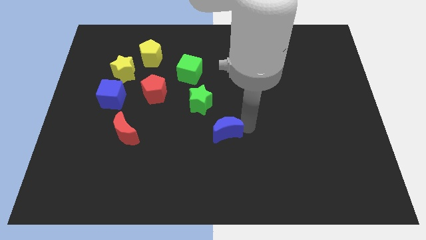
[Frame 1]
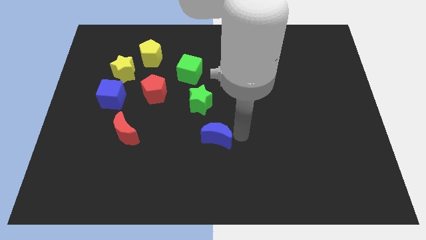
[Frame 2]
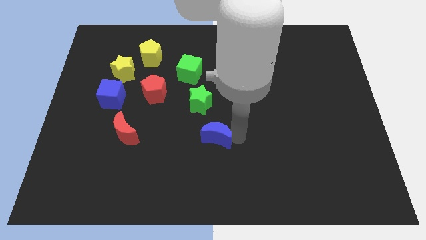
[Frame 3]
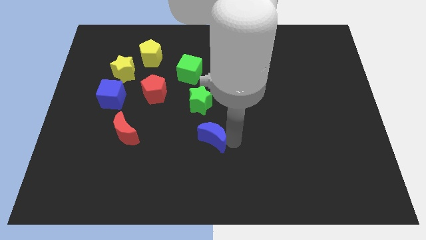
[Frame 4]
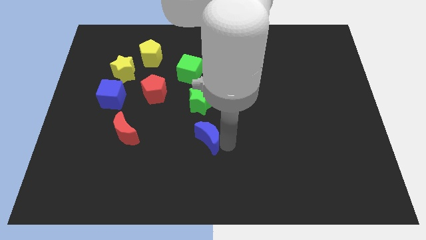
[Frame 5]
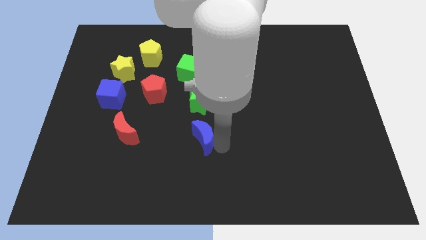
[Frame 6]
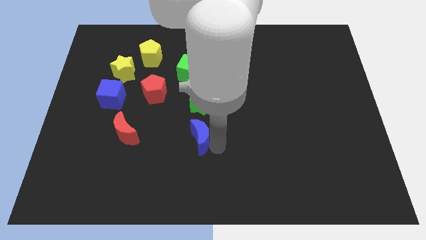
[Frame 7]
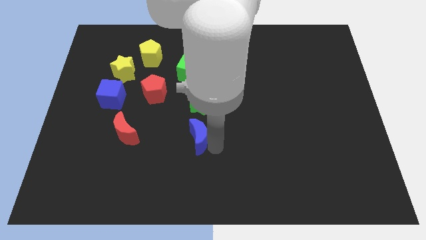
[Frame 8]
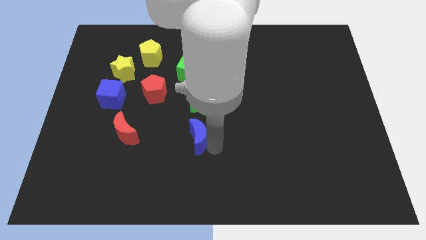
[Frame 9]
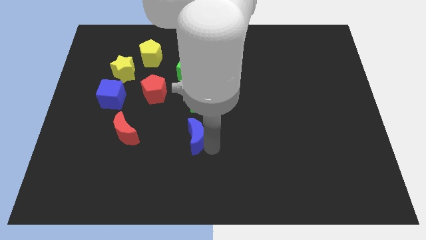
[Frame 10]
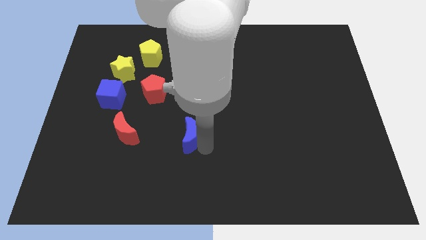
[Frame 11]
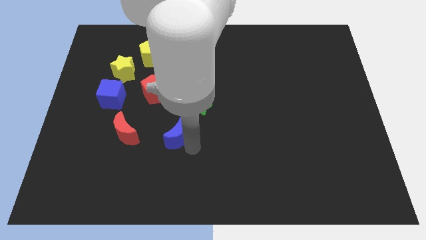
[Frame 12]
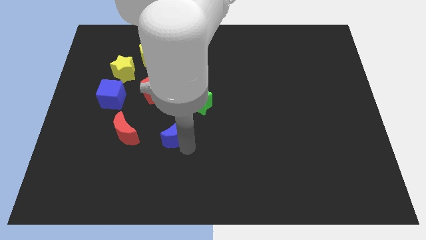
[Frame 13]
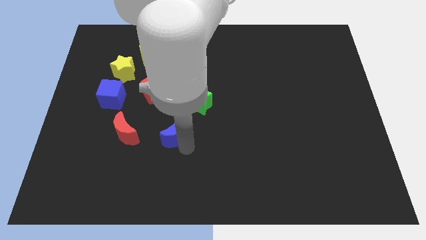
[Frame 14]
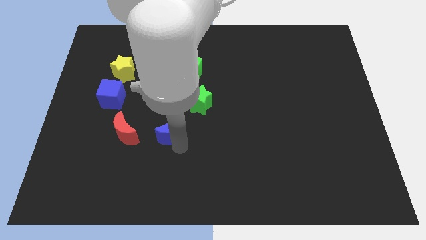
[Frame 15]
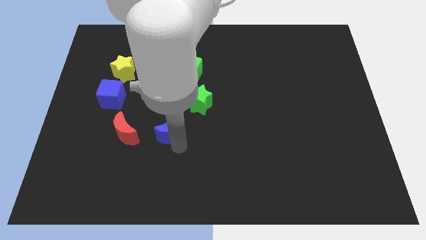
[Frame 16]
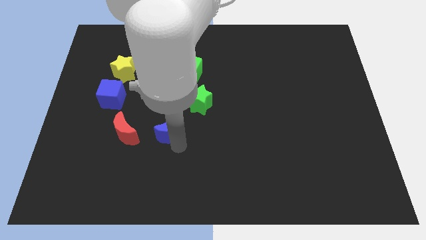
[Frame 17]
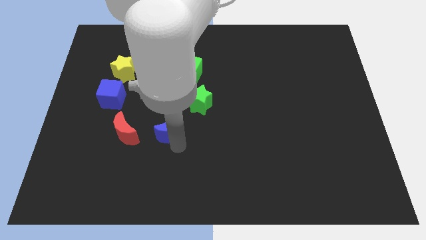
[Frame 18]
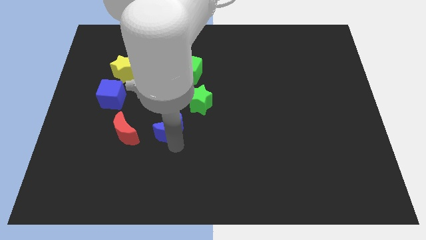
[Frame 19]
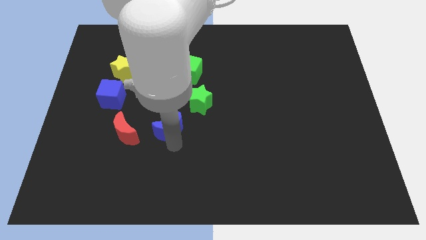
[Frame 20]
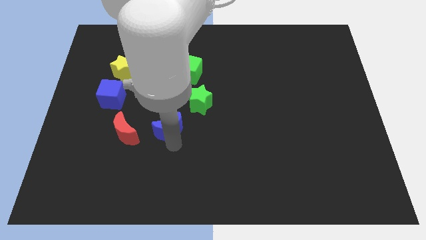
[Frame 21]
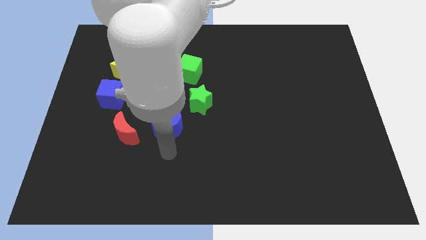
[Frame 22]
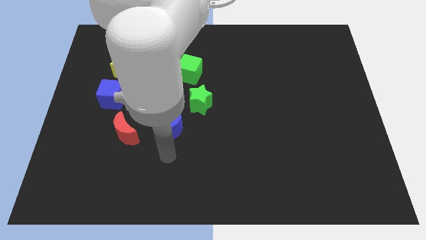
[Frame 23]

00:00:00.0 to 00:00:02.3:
move the blue moon between red moon and green star

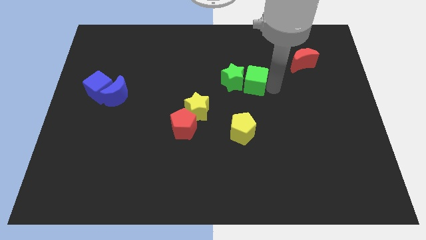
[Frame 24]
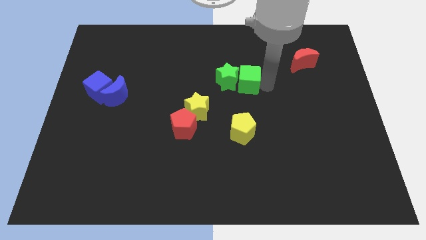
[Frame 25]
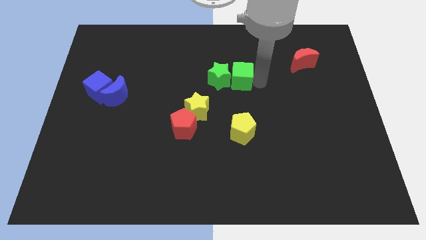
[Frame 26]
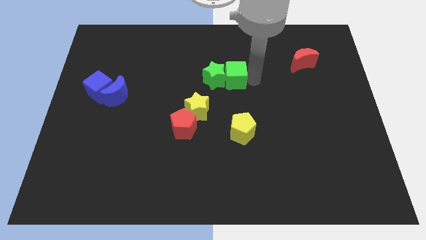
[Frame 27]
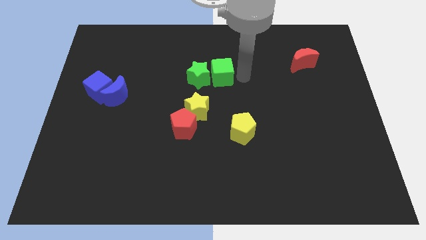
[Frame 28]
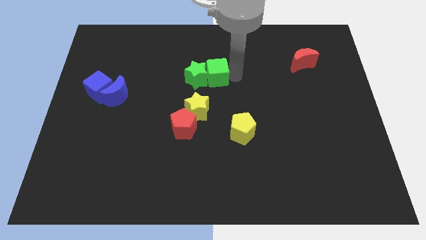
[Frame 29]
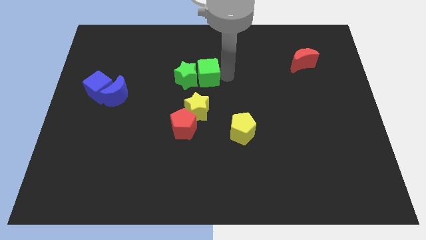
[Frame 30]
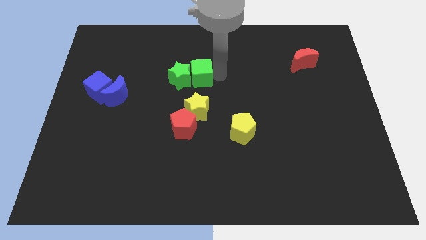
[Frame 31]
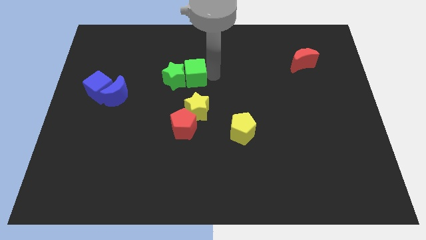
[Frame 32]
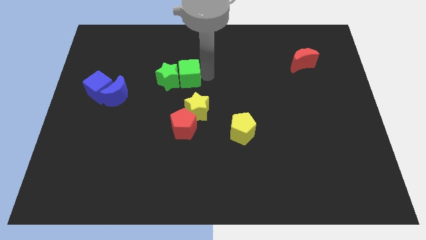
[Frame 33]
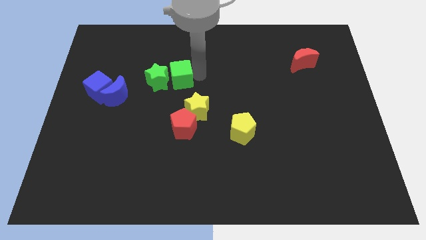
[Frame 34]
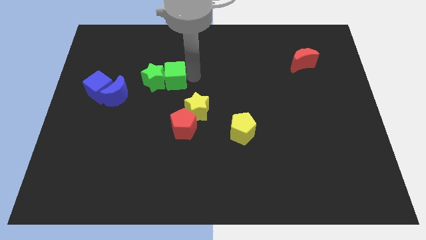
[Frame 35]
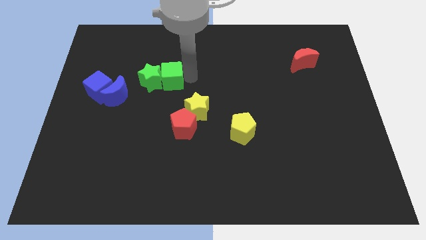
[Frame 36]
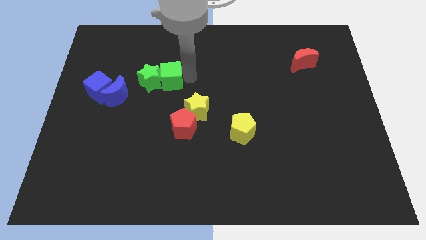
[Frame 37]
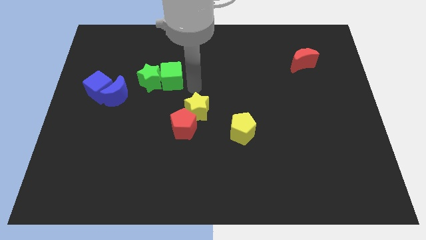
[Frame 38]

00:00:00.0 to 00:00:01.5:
push the green blocks to the left of the board

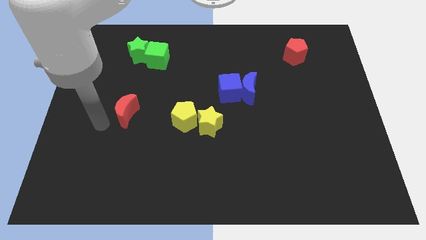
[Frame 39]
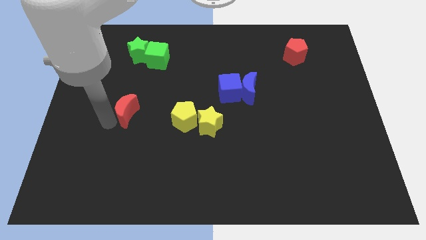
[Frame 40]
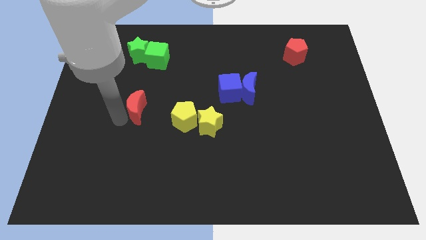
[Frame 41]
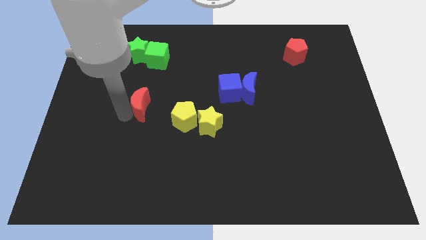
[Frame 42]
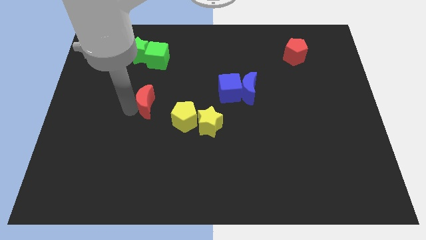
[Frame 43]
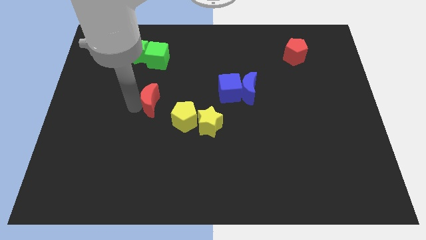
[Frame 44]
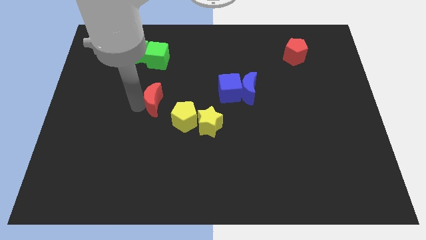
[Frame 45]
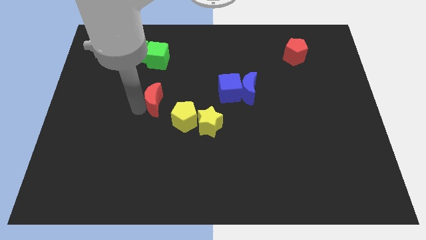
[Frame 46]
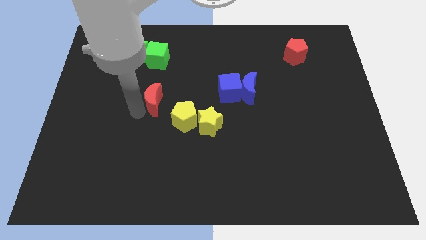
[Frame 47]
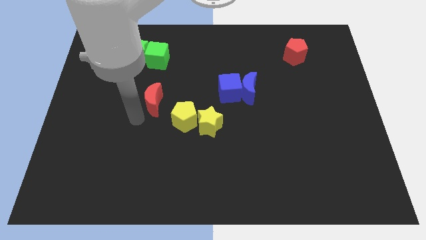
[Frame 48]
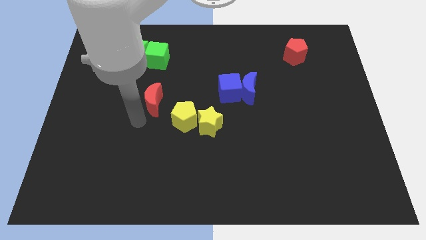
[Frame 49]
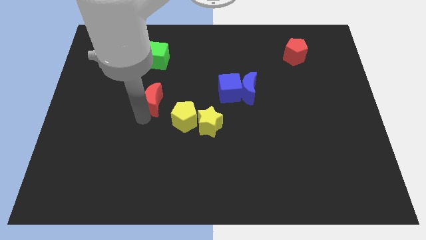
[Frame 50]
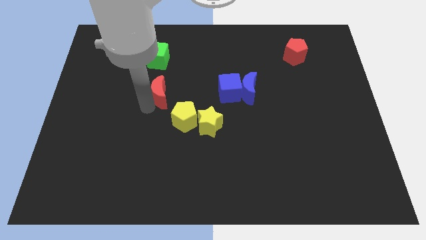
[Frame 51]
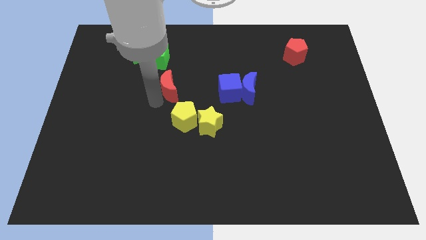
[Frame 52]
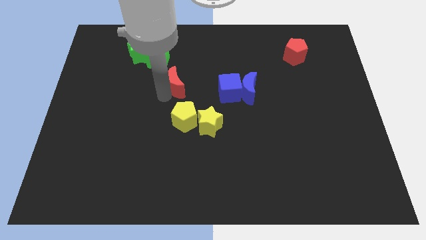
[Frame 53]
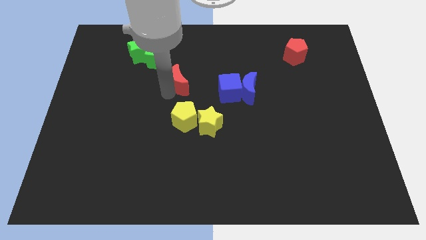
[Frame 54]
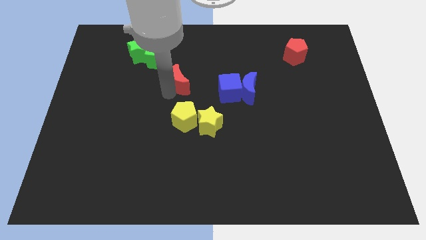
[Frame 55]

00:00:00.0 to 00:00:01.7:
put the red moon above the yellow pentagon

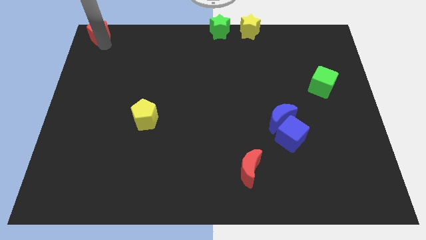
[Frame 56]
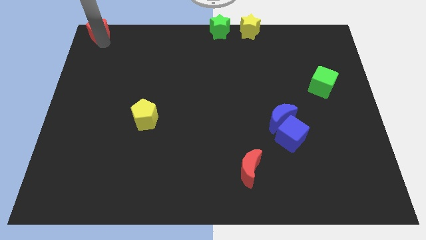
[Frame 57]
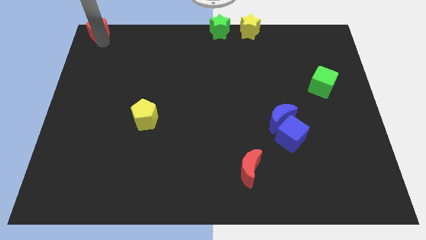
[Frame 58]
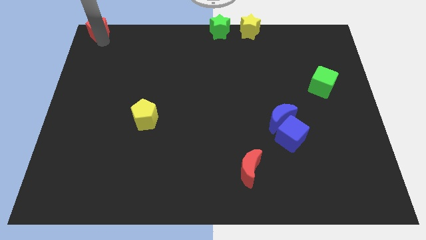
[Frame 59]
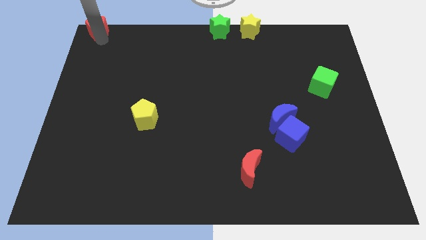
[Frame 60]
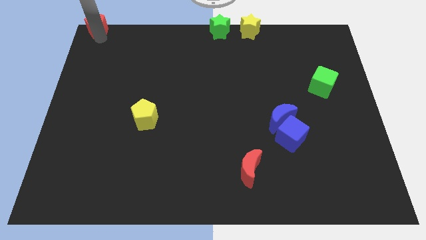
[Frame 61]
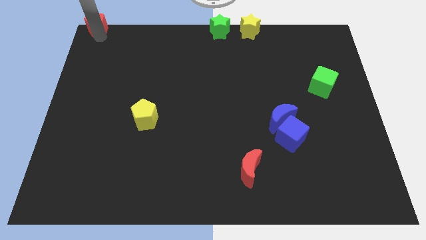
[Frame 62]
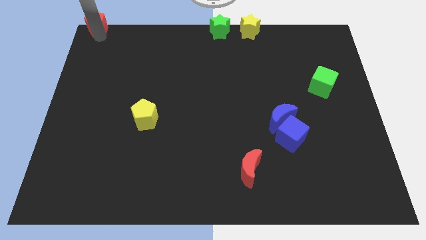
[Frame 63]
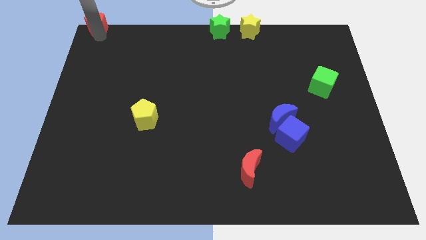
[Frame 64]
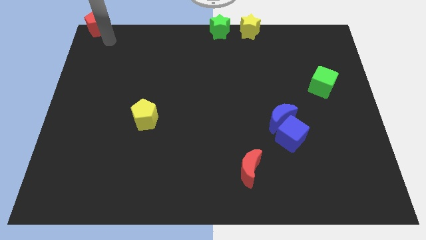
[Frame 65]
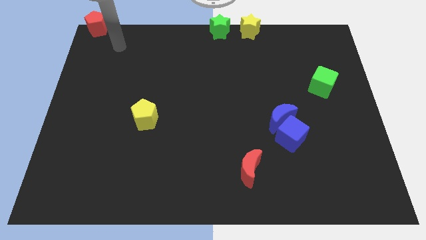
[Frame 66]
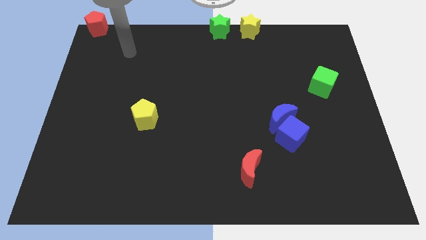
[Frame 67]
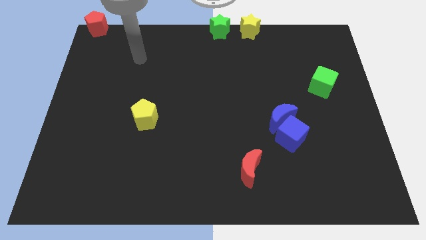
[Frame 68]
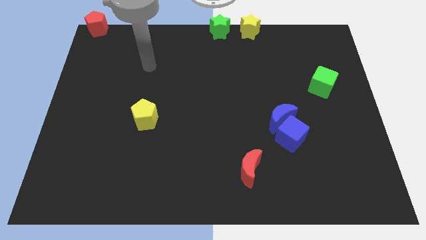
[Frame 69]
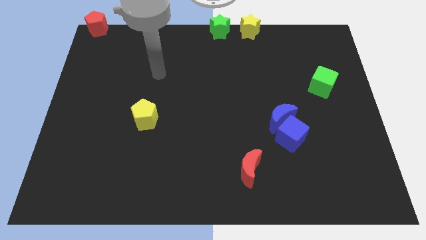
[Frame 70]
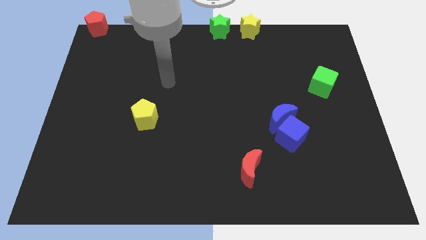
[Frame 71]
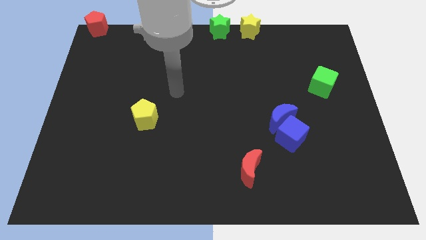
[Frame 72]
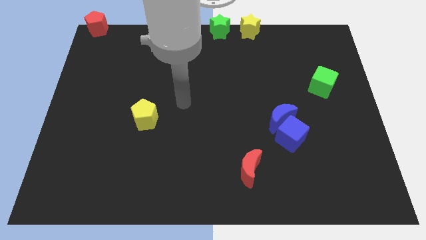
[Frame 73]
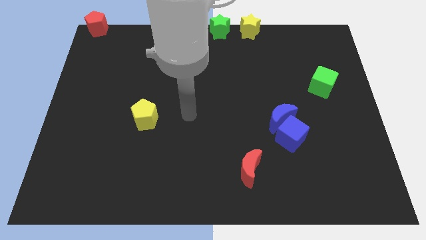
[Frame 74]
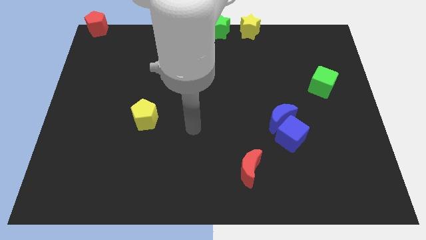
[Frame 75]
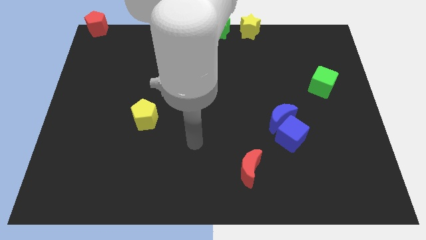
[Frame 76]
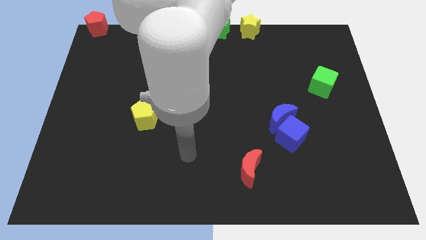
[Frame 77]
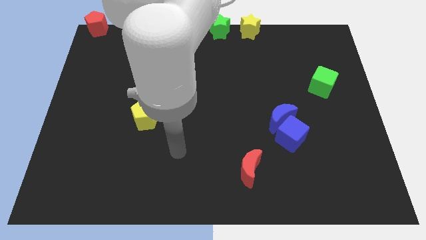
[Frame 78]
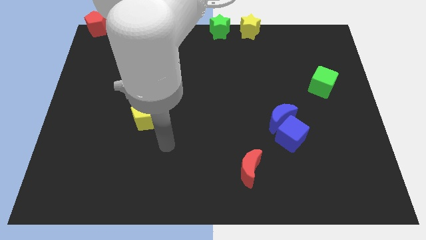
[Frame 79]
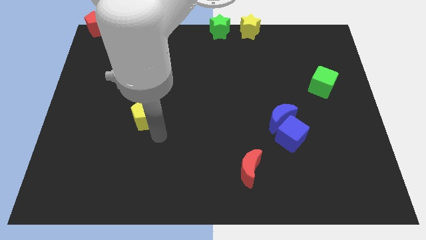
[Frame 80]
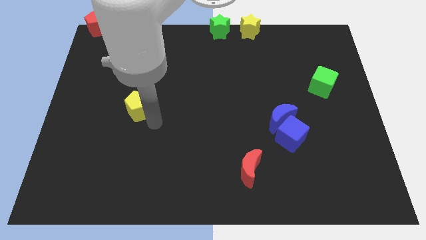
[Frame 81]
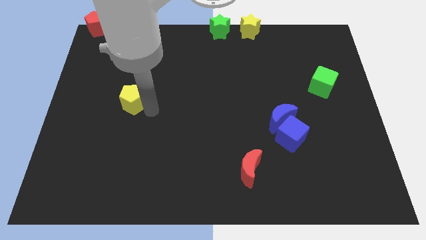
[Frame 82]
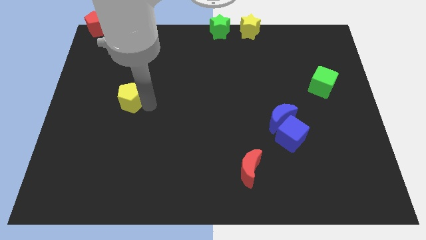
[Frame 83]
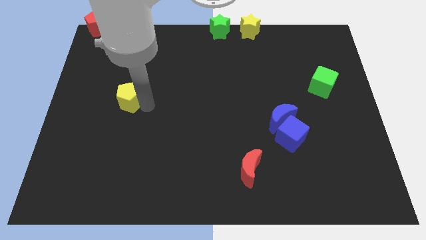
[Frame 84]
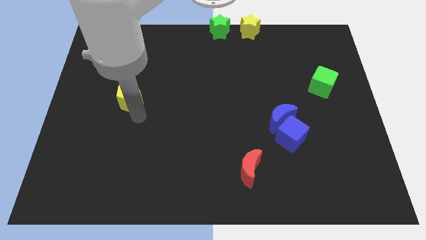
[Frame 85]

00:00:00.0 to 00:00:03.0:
push yellow pentagon towards middle of the board

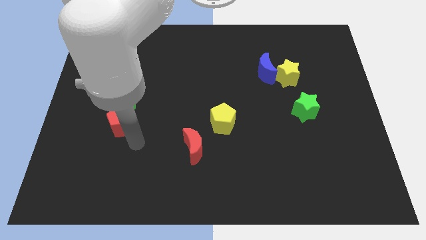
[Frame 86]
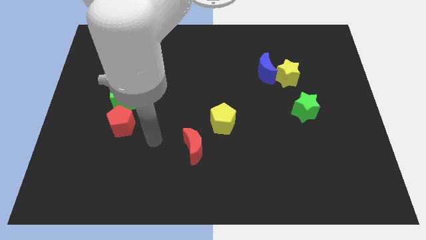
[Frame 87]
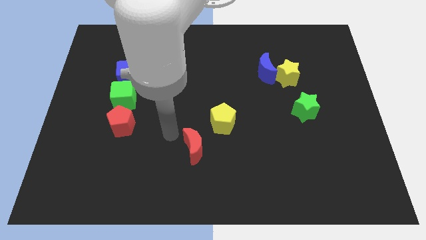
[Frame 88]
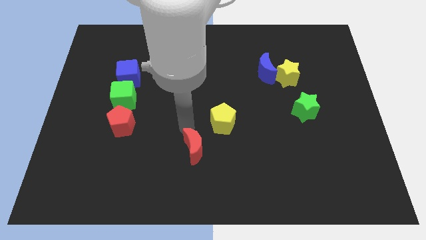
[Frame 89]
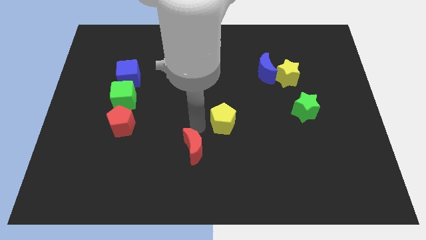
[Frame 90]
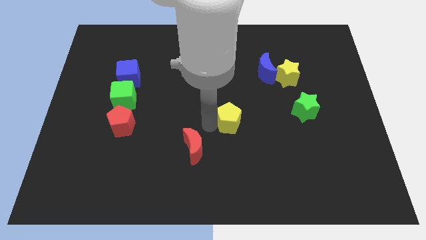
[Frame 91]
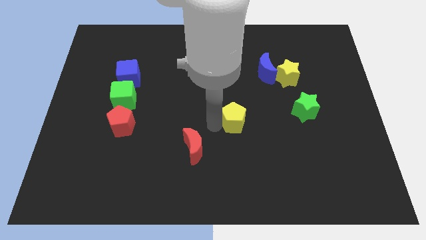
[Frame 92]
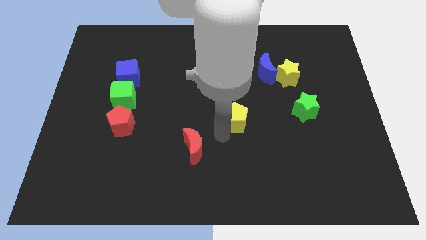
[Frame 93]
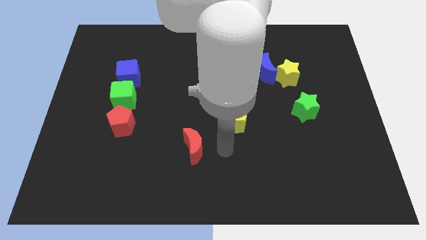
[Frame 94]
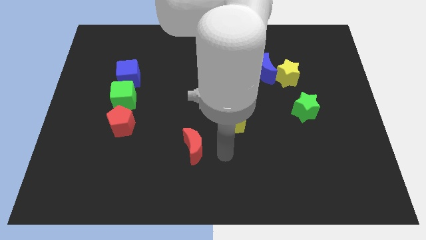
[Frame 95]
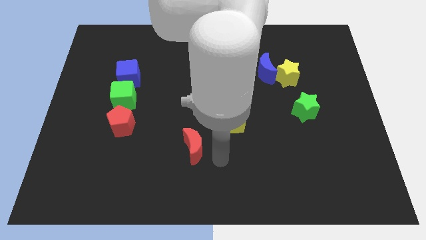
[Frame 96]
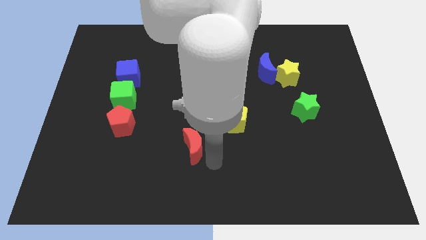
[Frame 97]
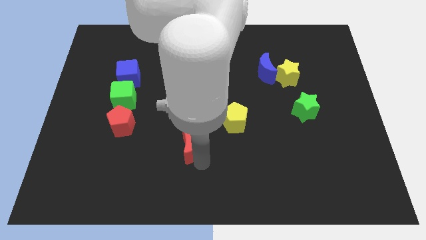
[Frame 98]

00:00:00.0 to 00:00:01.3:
move your arm to the right of red moon
